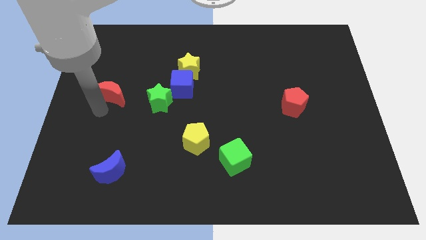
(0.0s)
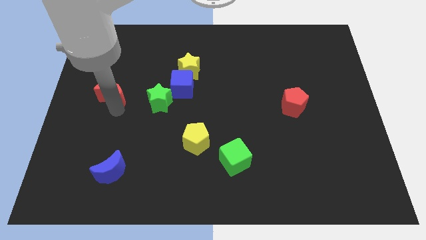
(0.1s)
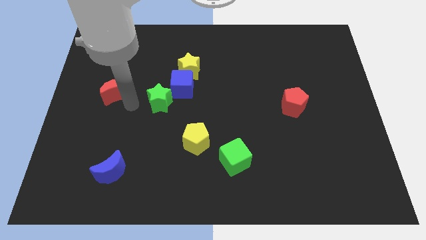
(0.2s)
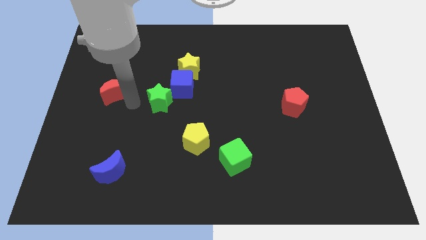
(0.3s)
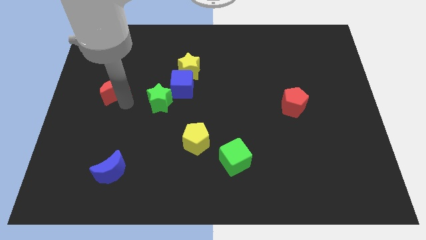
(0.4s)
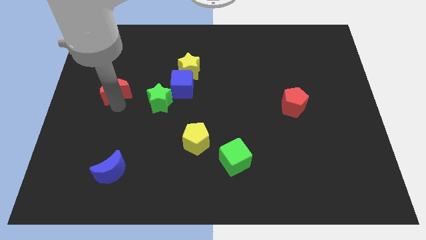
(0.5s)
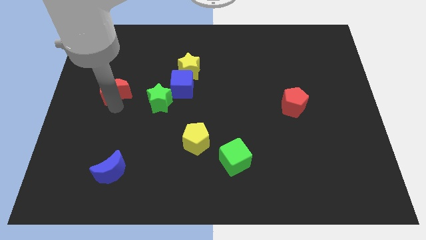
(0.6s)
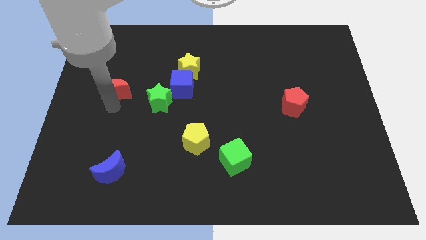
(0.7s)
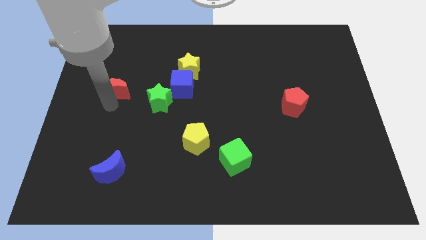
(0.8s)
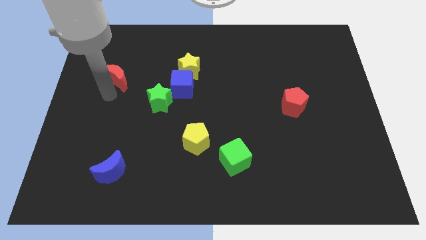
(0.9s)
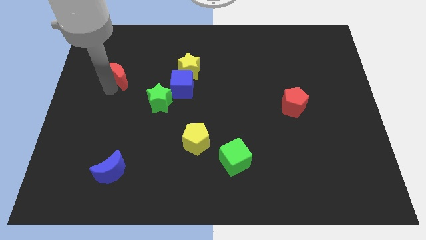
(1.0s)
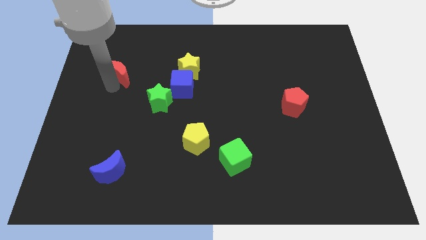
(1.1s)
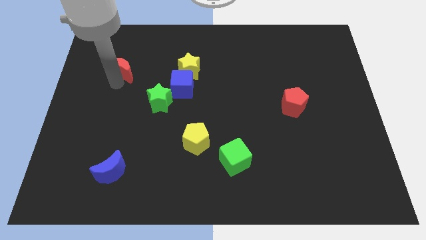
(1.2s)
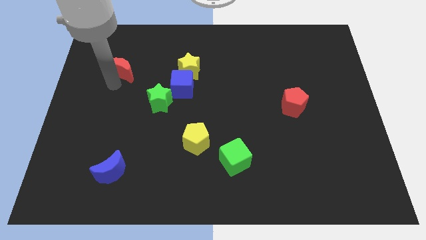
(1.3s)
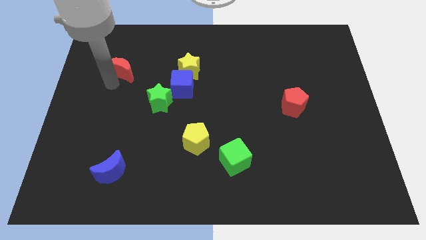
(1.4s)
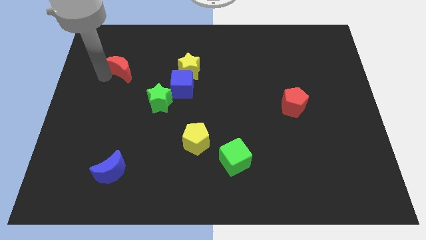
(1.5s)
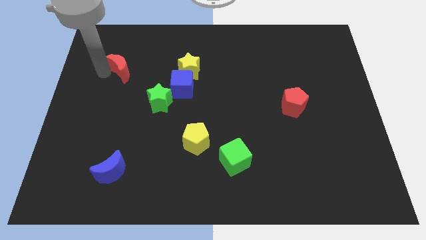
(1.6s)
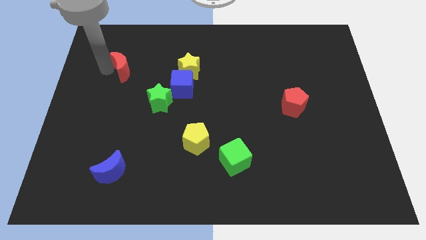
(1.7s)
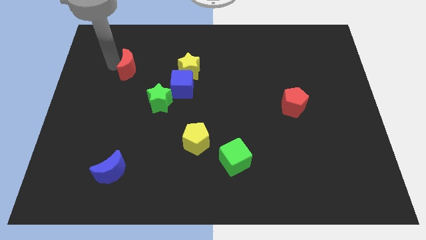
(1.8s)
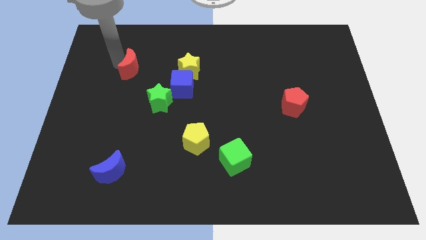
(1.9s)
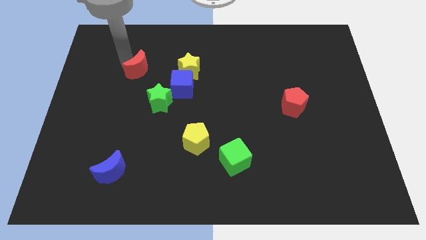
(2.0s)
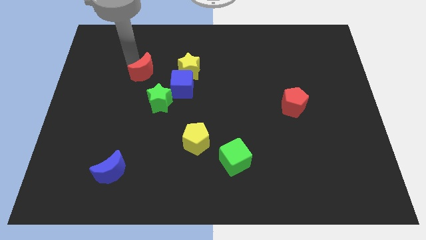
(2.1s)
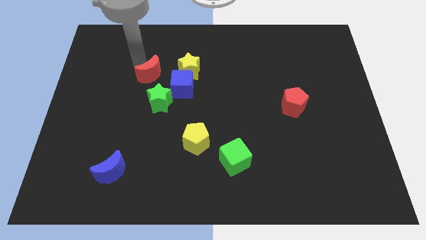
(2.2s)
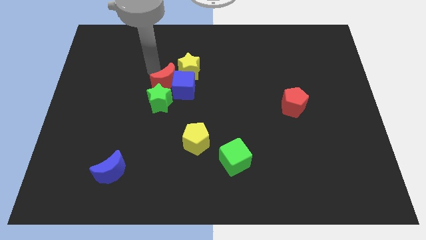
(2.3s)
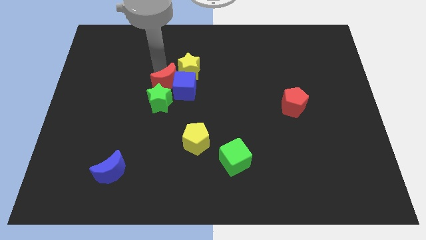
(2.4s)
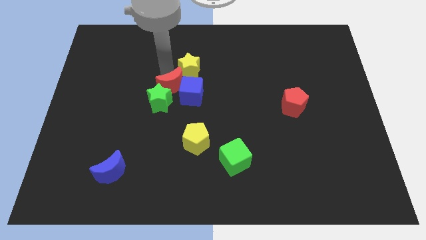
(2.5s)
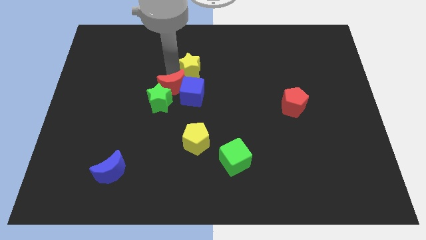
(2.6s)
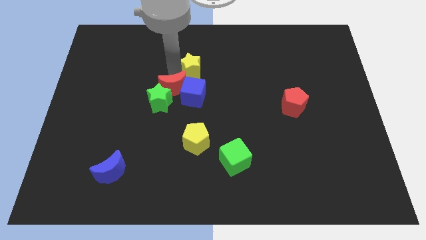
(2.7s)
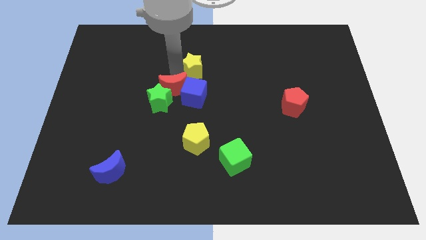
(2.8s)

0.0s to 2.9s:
move the red moon into blue cube

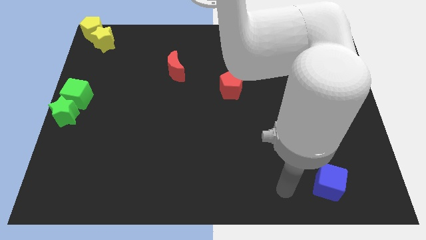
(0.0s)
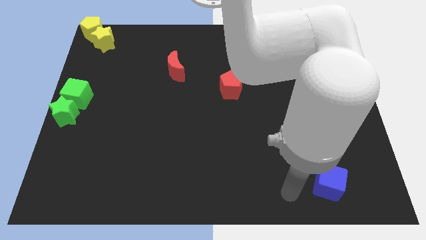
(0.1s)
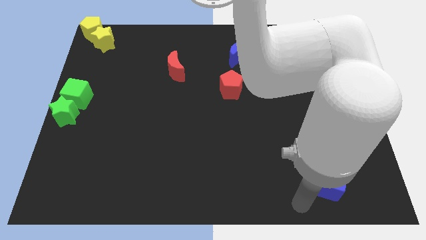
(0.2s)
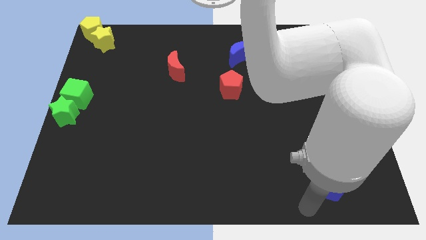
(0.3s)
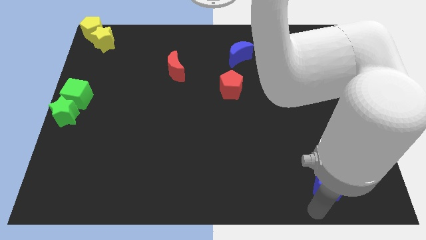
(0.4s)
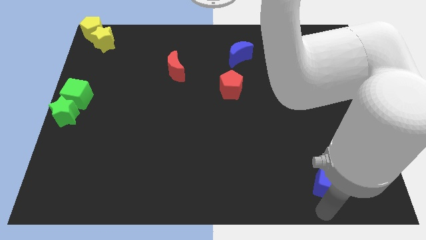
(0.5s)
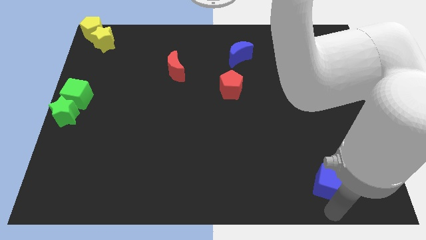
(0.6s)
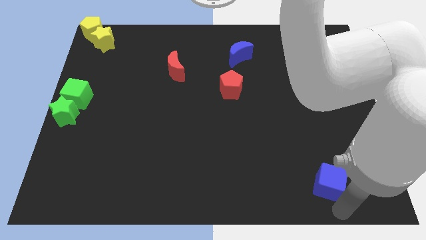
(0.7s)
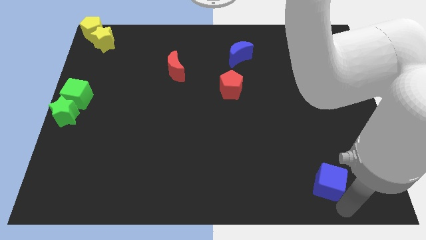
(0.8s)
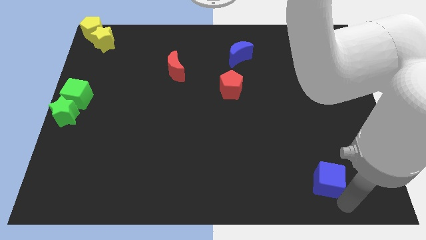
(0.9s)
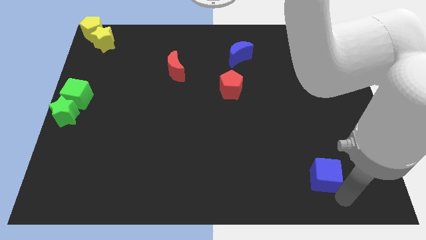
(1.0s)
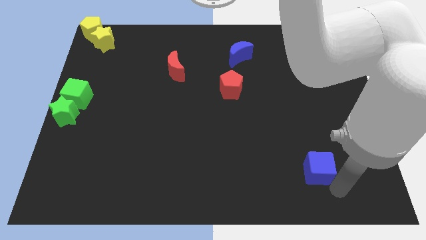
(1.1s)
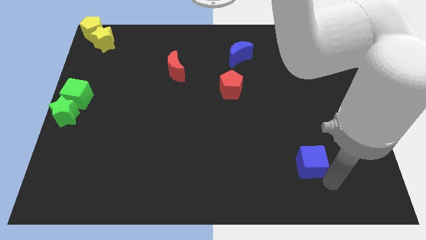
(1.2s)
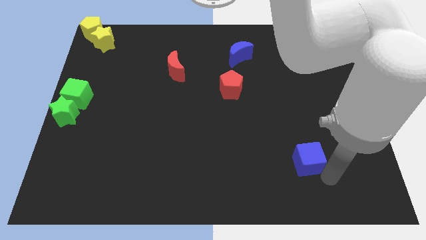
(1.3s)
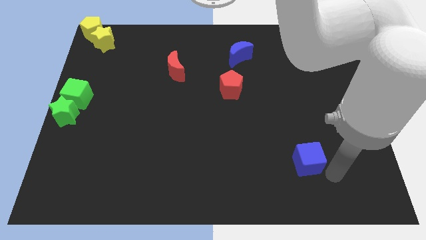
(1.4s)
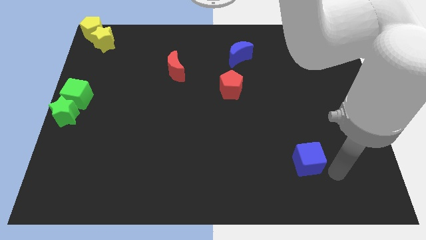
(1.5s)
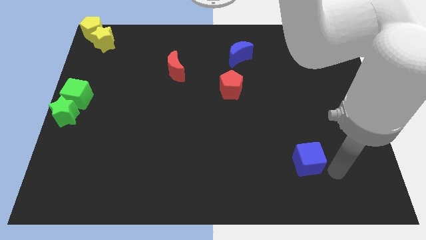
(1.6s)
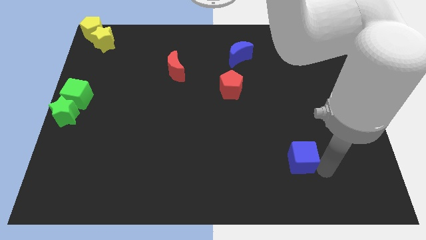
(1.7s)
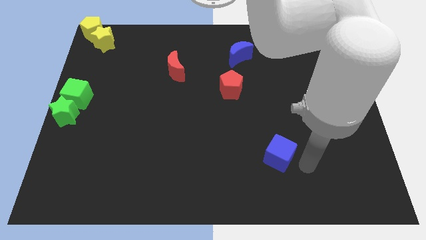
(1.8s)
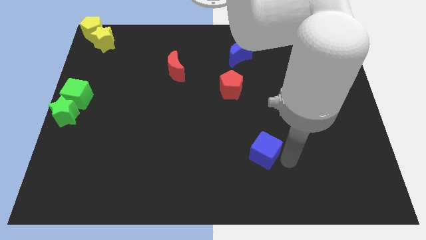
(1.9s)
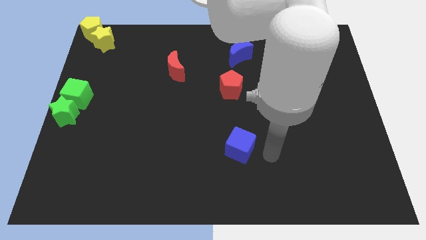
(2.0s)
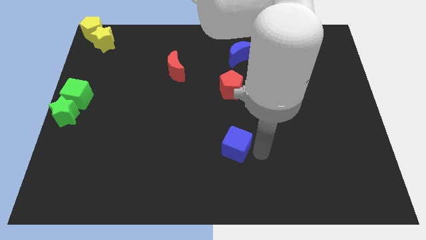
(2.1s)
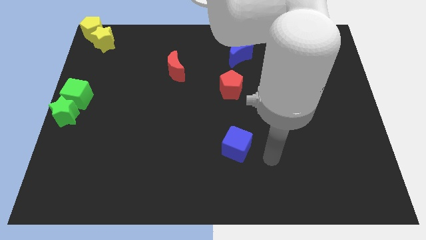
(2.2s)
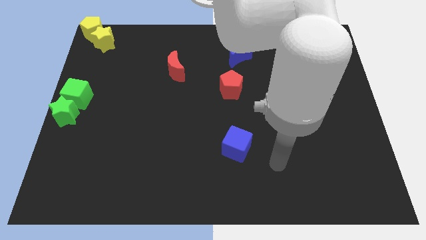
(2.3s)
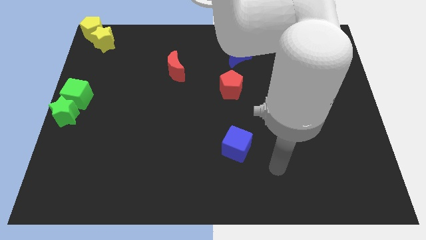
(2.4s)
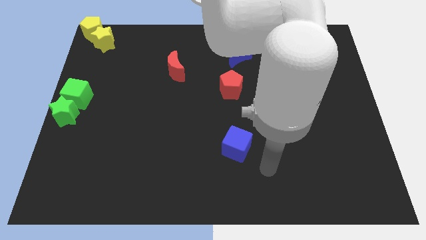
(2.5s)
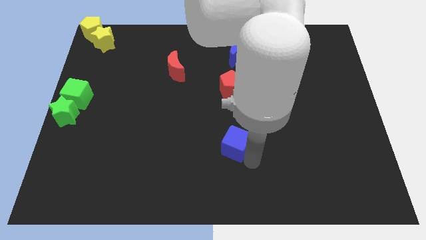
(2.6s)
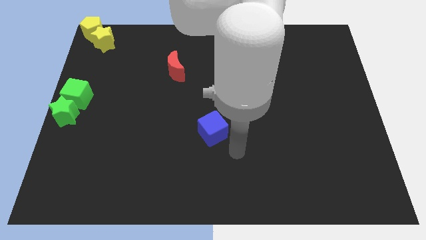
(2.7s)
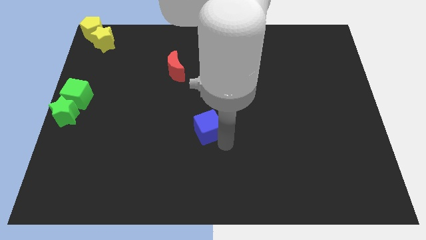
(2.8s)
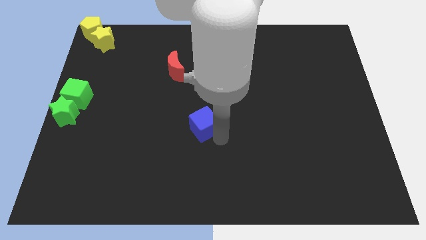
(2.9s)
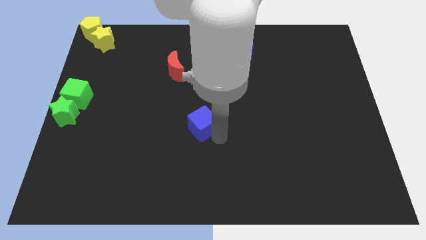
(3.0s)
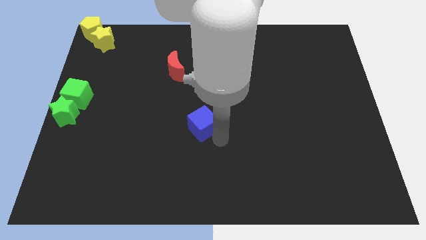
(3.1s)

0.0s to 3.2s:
place the blue cube diagonal to the red pentagon

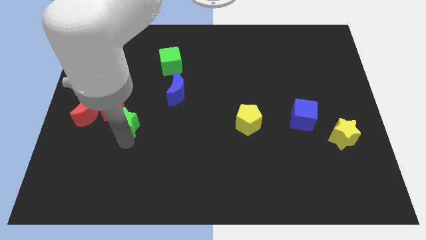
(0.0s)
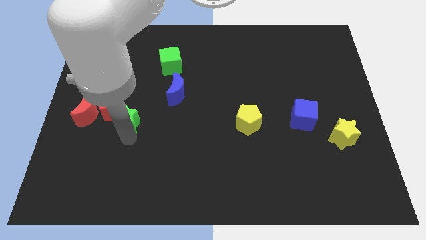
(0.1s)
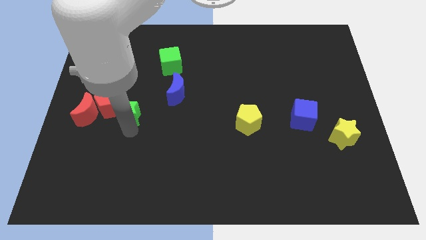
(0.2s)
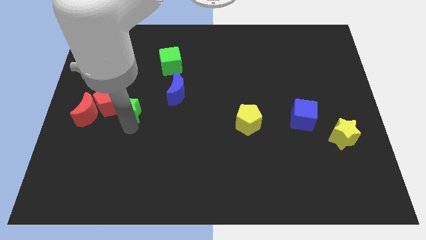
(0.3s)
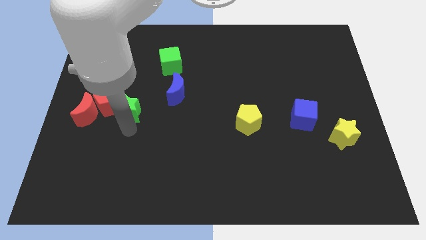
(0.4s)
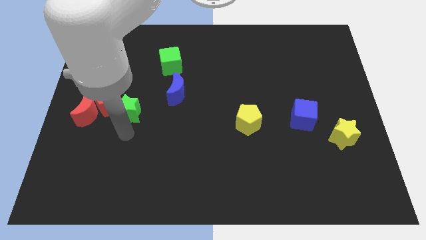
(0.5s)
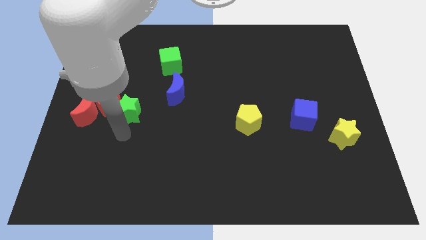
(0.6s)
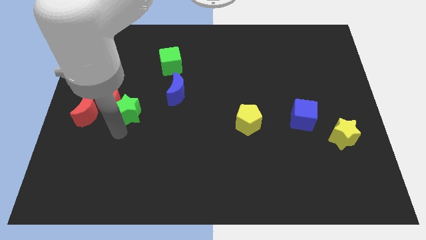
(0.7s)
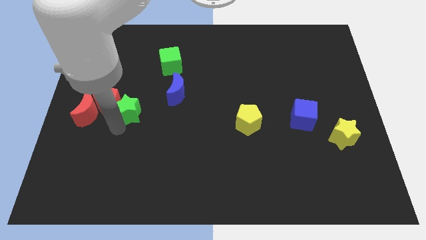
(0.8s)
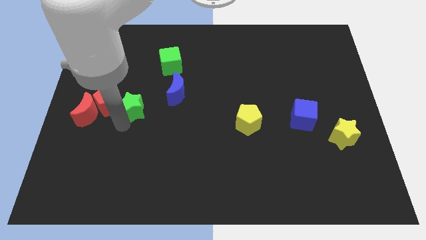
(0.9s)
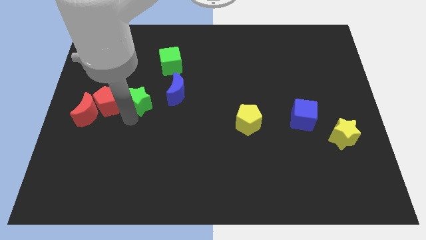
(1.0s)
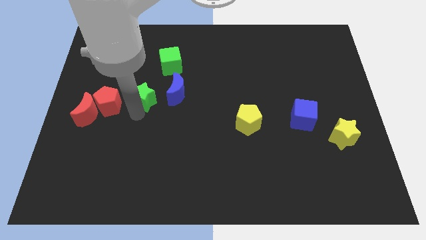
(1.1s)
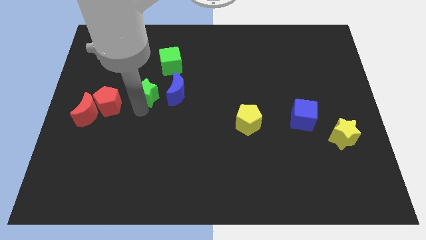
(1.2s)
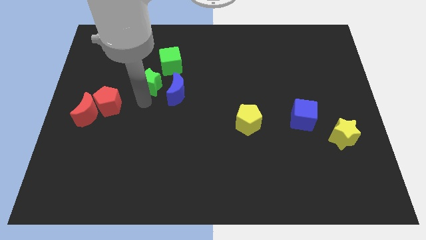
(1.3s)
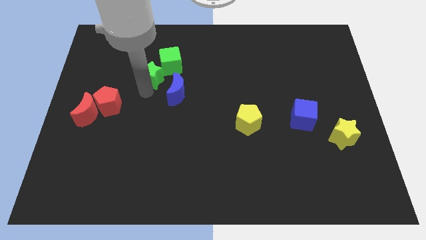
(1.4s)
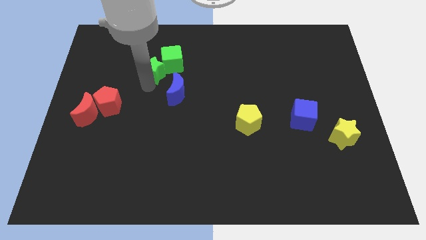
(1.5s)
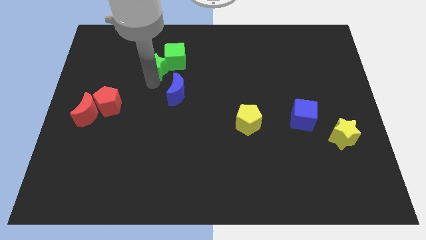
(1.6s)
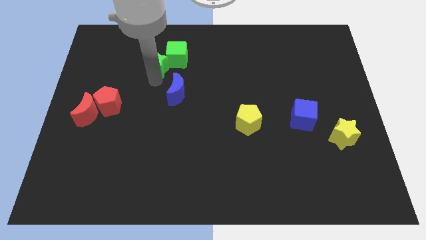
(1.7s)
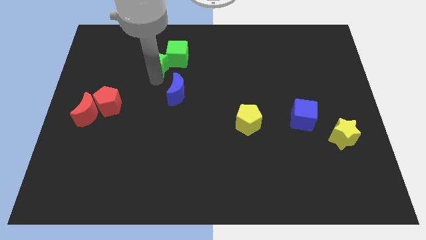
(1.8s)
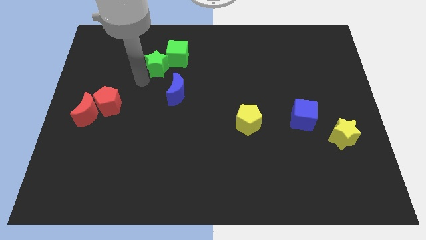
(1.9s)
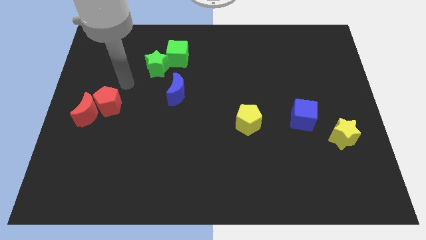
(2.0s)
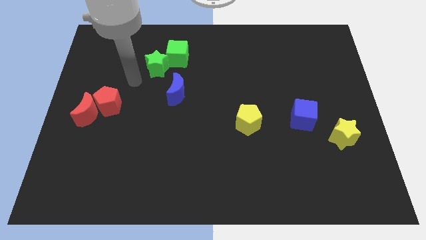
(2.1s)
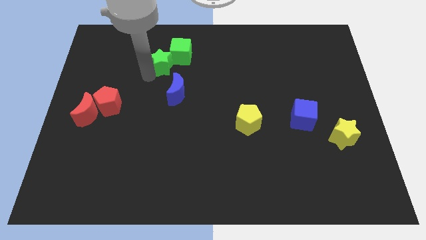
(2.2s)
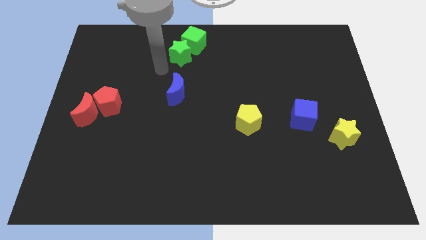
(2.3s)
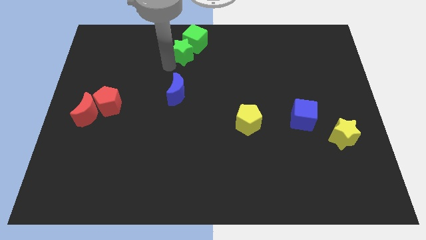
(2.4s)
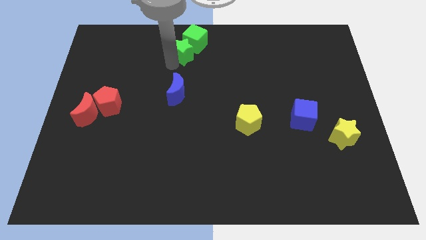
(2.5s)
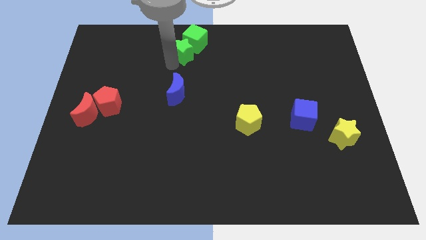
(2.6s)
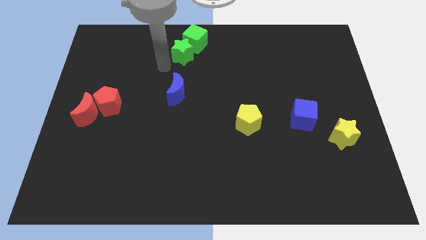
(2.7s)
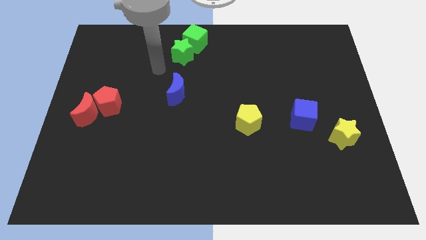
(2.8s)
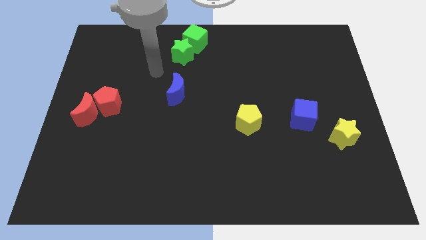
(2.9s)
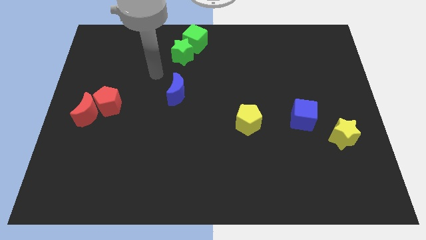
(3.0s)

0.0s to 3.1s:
slide green star into green cube
